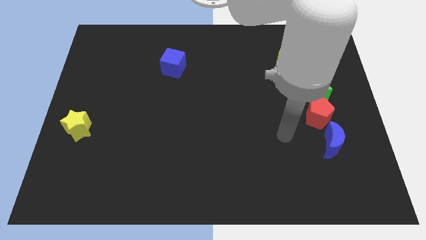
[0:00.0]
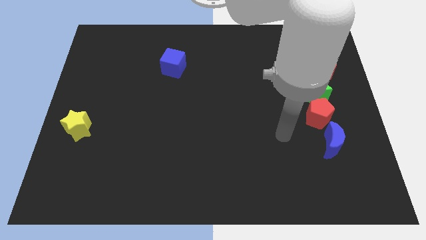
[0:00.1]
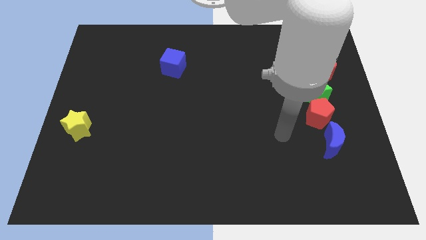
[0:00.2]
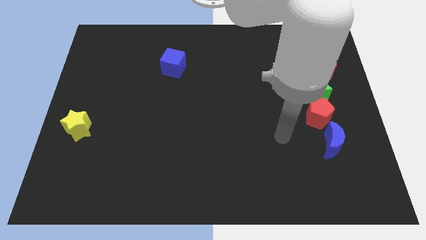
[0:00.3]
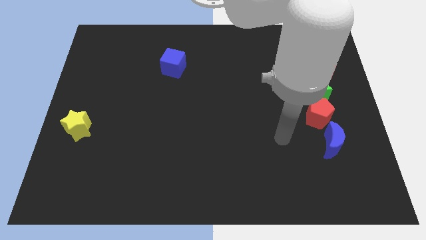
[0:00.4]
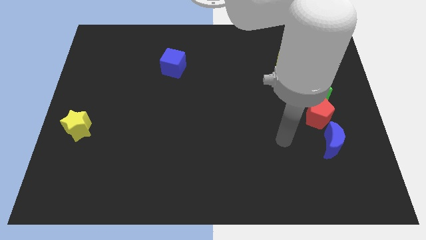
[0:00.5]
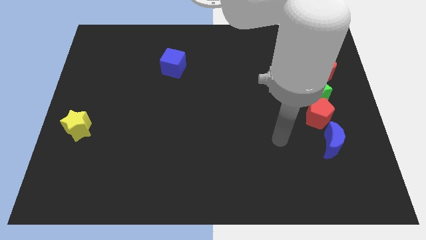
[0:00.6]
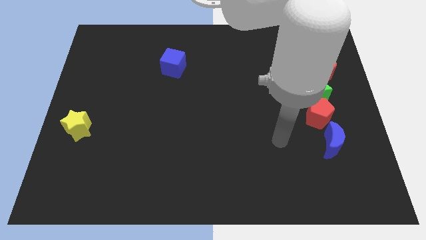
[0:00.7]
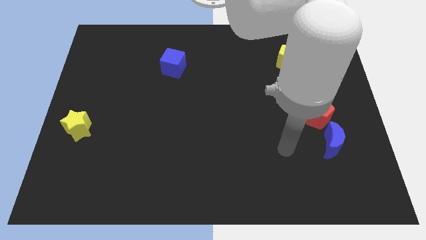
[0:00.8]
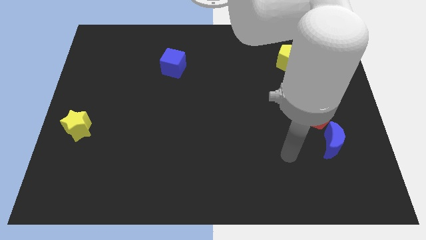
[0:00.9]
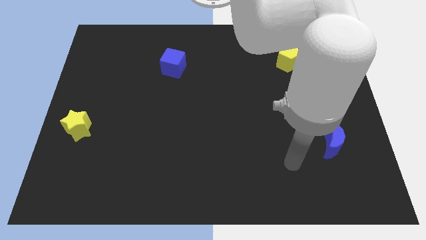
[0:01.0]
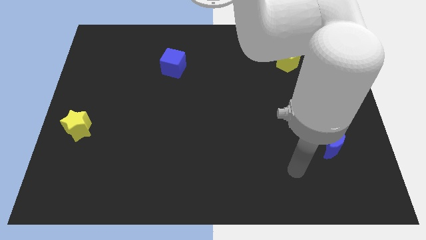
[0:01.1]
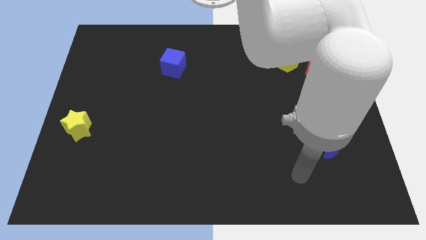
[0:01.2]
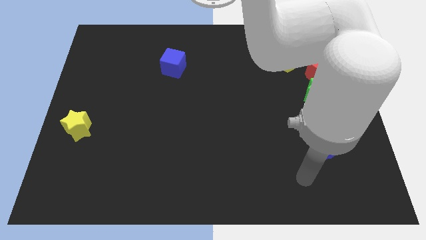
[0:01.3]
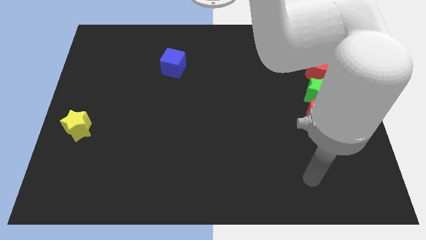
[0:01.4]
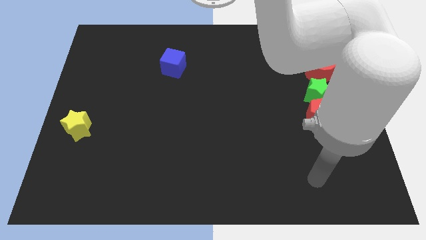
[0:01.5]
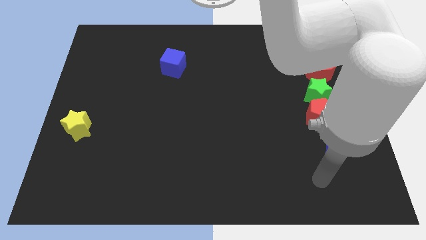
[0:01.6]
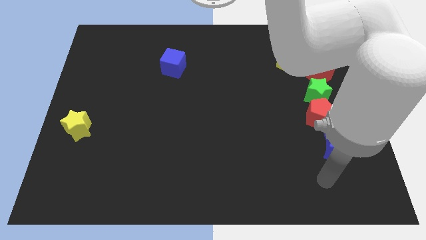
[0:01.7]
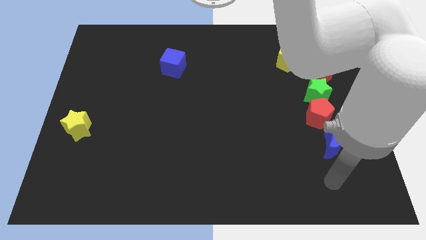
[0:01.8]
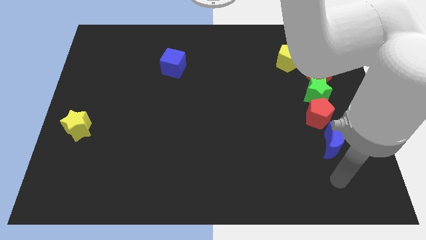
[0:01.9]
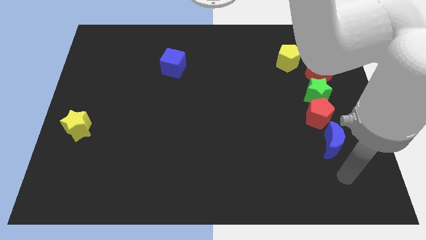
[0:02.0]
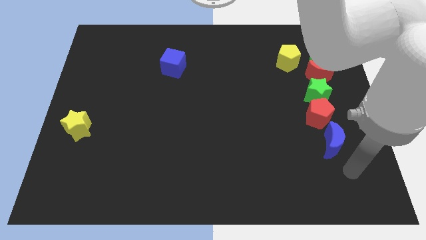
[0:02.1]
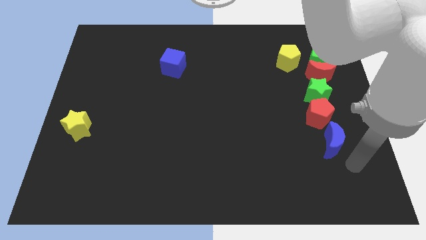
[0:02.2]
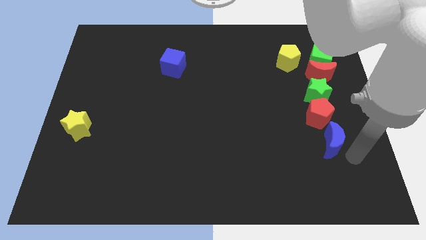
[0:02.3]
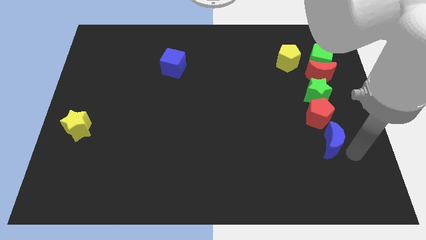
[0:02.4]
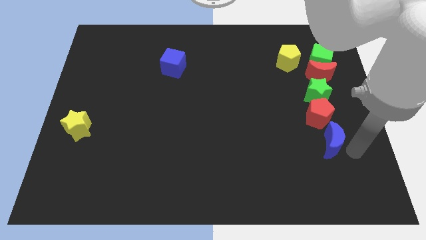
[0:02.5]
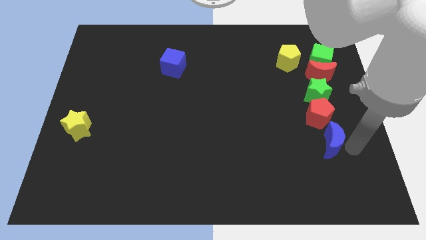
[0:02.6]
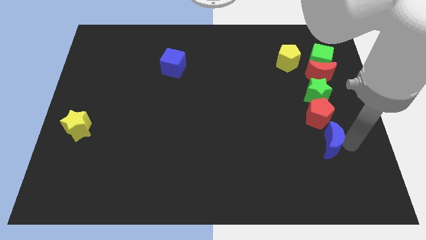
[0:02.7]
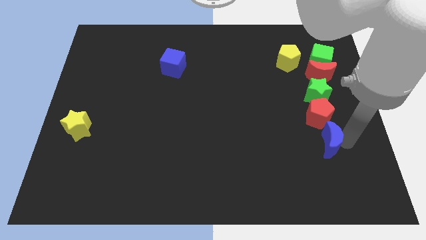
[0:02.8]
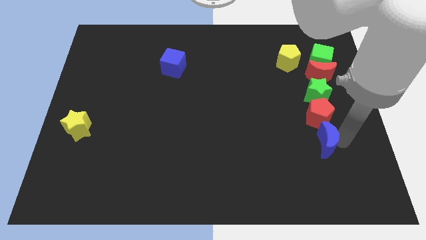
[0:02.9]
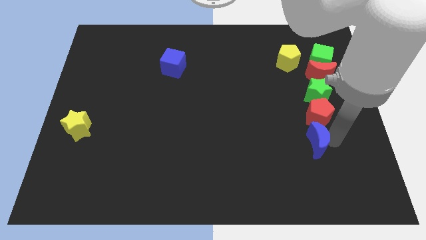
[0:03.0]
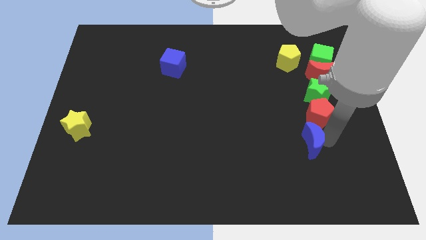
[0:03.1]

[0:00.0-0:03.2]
slightly push the blue moon

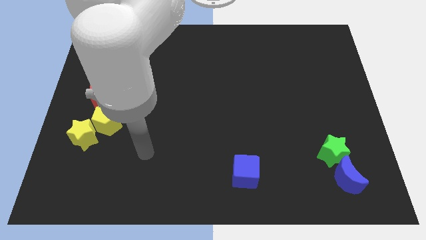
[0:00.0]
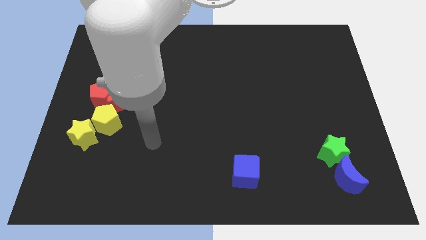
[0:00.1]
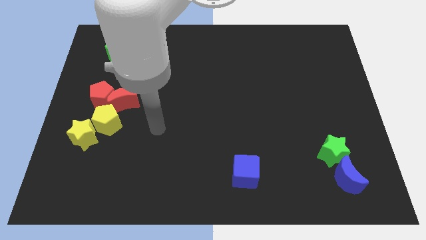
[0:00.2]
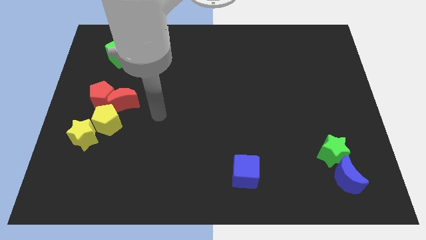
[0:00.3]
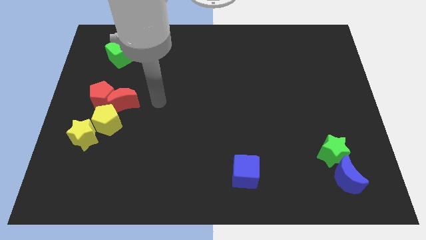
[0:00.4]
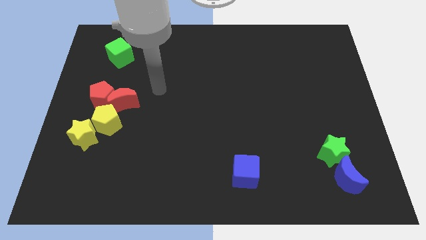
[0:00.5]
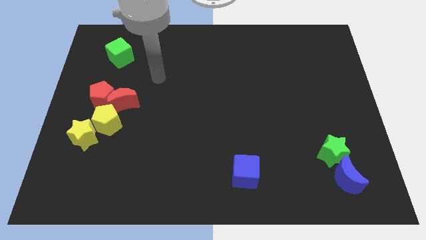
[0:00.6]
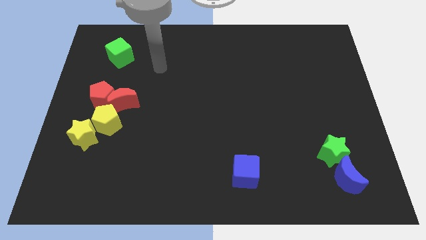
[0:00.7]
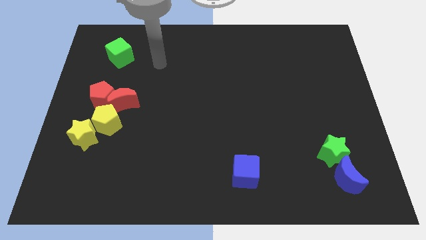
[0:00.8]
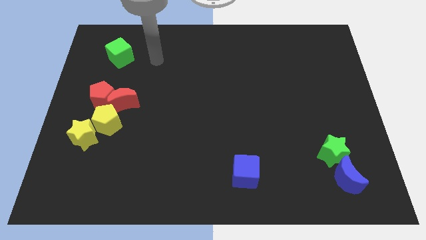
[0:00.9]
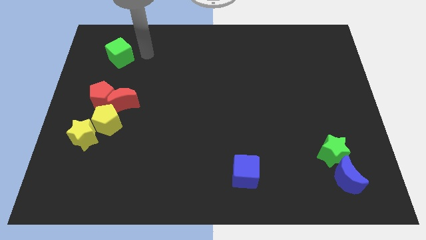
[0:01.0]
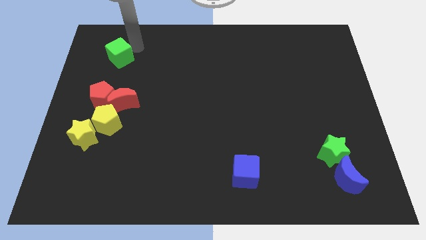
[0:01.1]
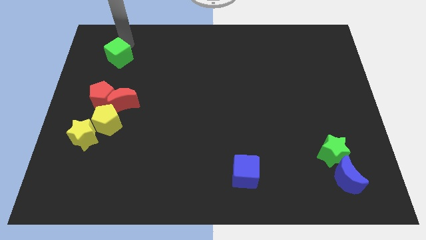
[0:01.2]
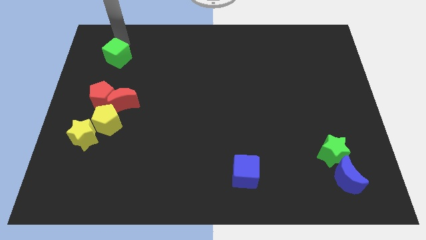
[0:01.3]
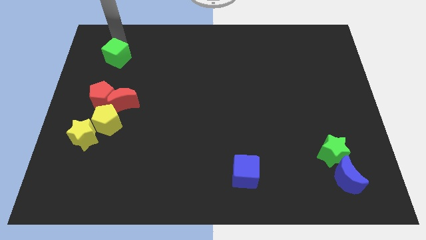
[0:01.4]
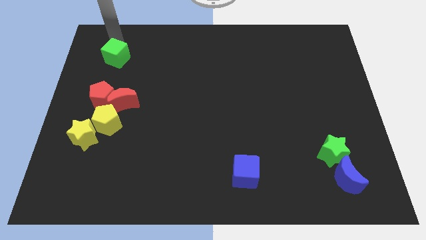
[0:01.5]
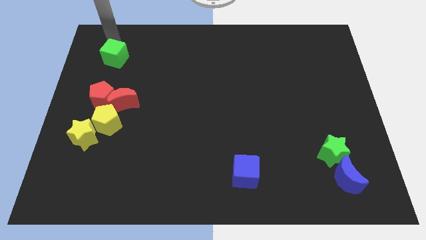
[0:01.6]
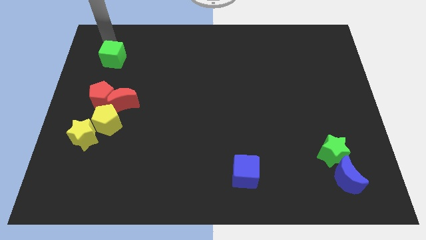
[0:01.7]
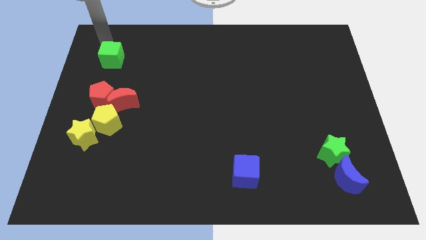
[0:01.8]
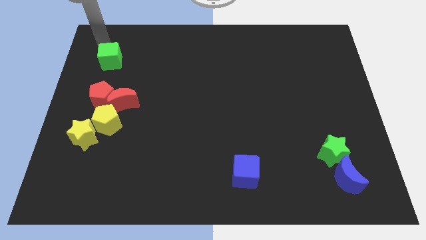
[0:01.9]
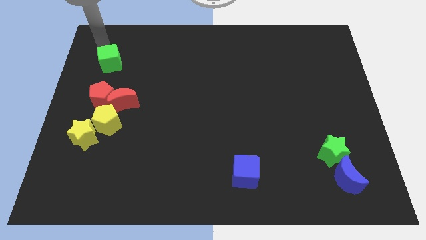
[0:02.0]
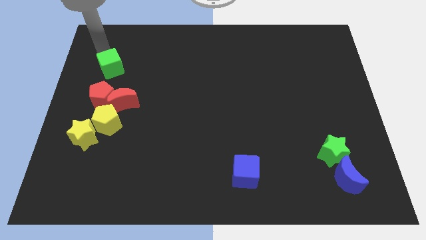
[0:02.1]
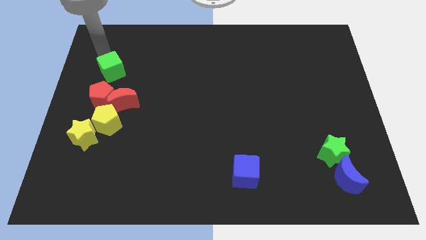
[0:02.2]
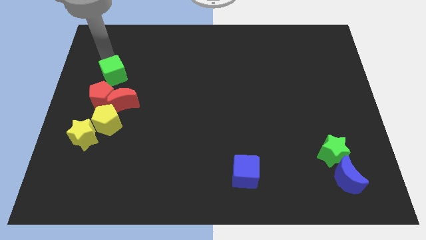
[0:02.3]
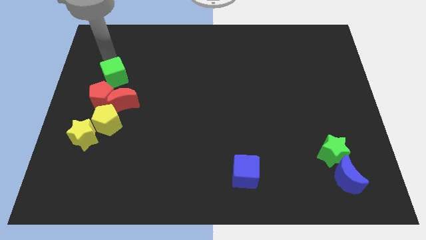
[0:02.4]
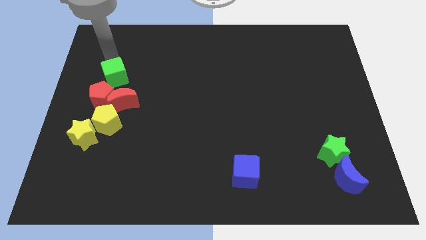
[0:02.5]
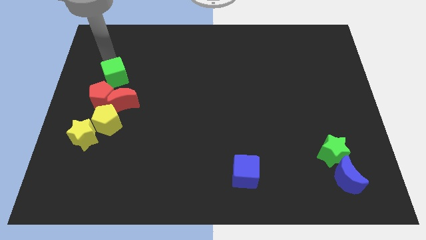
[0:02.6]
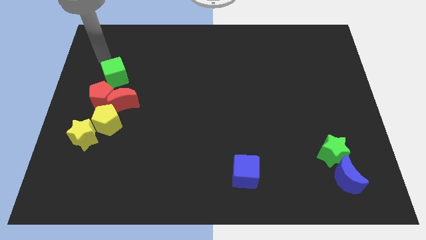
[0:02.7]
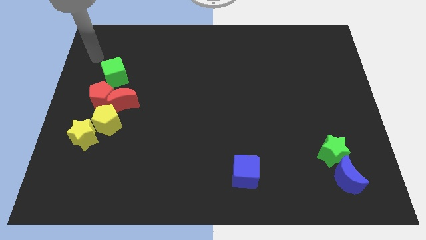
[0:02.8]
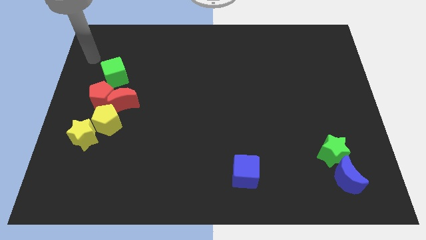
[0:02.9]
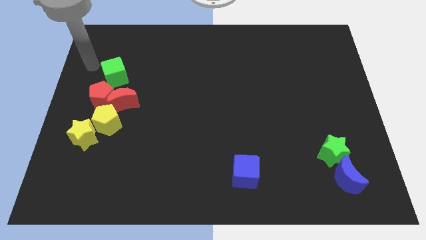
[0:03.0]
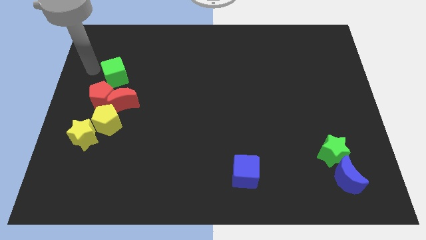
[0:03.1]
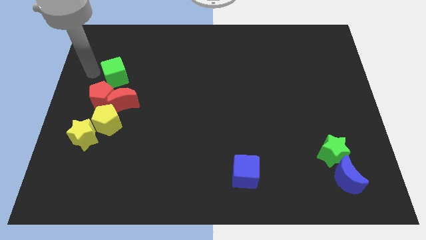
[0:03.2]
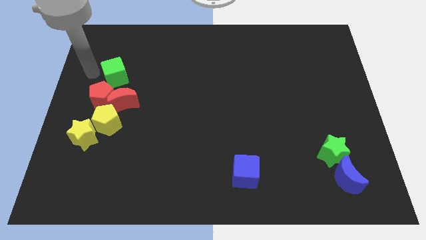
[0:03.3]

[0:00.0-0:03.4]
place the green cube on top of the red pentagon

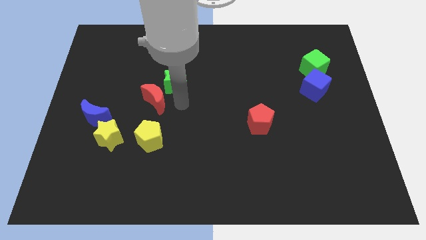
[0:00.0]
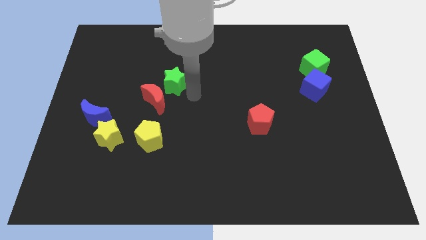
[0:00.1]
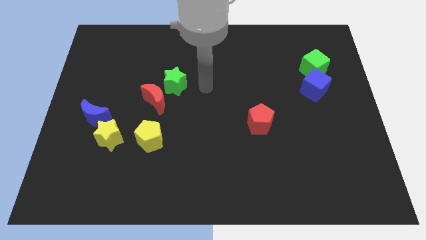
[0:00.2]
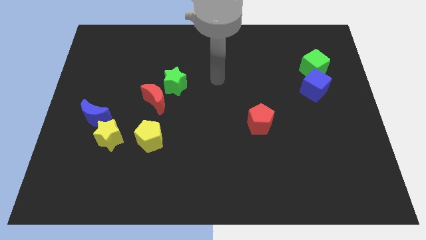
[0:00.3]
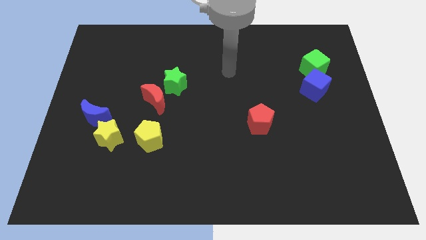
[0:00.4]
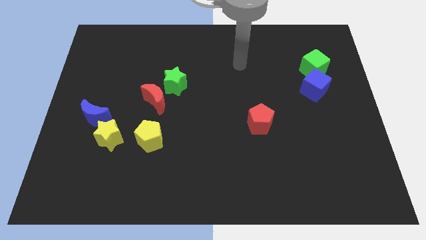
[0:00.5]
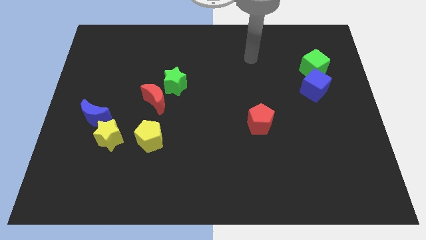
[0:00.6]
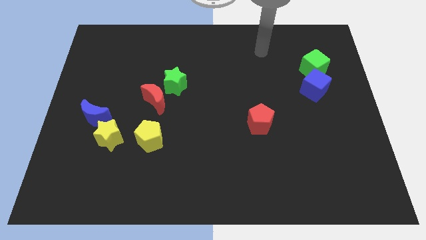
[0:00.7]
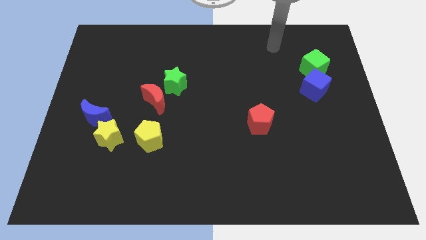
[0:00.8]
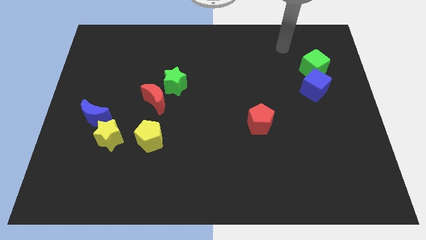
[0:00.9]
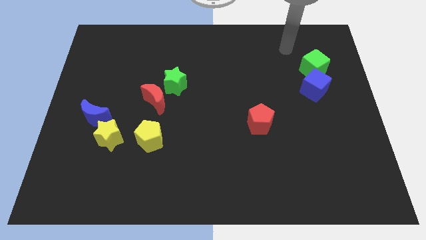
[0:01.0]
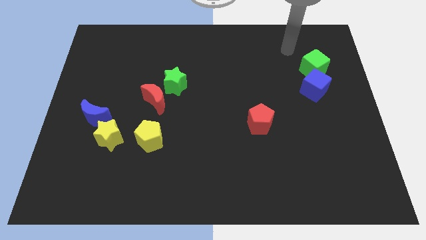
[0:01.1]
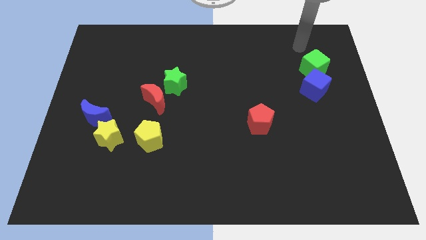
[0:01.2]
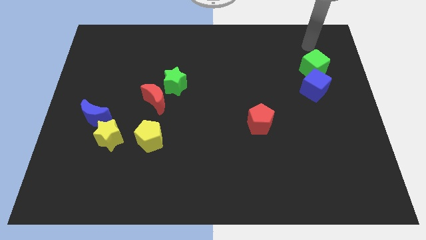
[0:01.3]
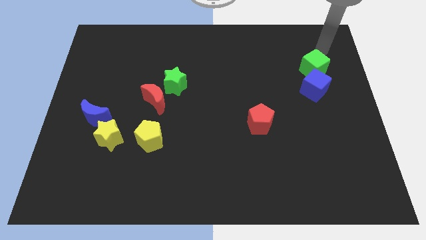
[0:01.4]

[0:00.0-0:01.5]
move the arm above the green cube

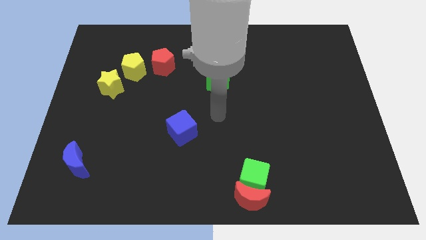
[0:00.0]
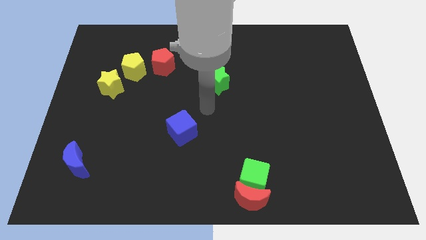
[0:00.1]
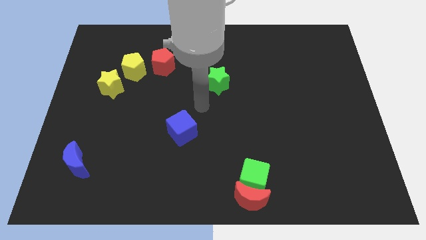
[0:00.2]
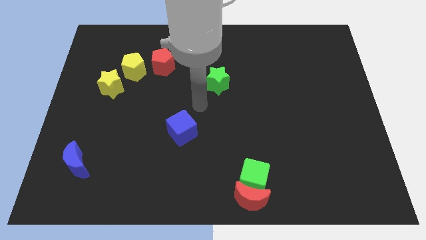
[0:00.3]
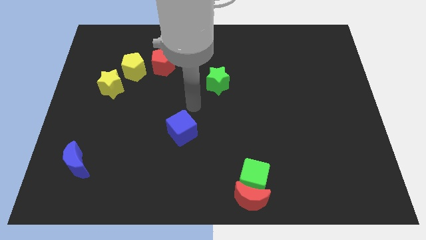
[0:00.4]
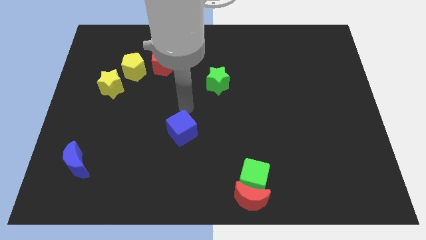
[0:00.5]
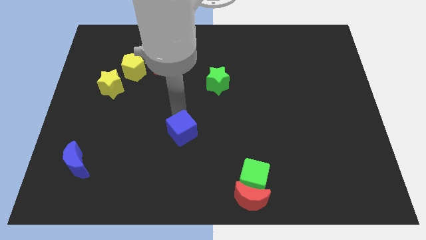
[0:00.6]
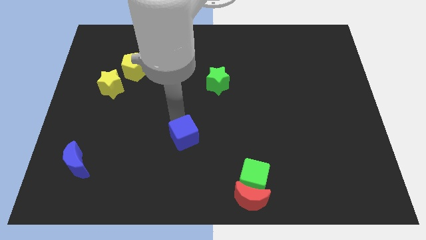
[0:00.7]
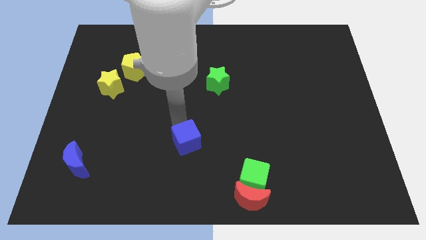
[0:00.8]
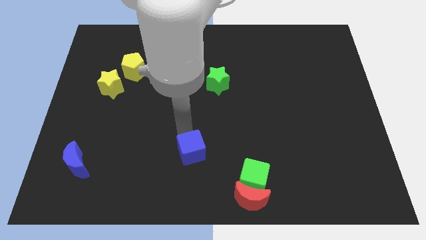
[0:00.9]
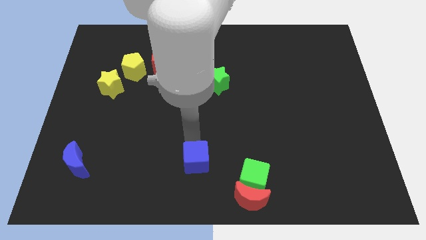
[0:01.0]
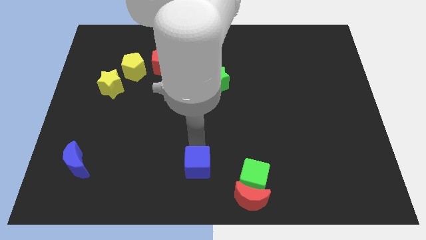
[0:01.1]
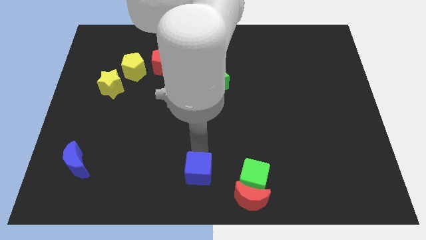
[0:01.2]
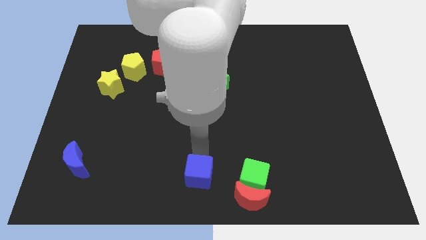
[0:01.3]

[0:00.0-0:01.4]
push the blue cube to the left side of the green block
